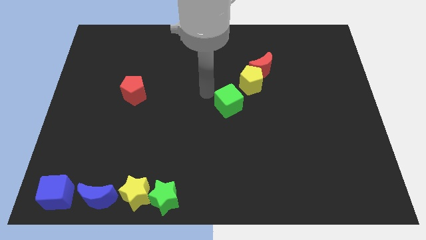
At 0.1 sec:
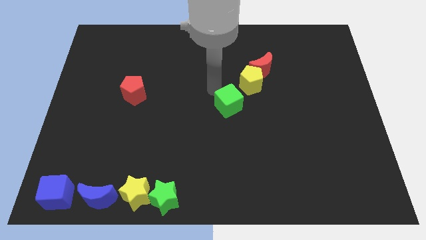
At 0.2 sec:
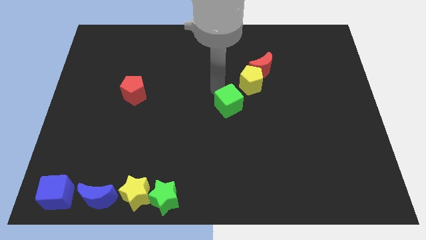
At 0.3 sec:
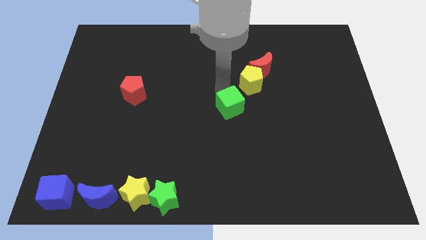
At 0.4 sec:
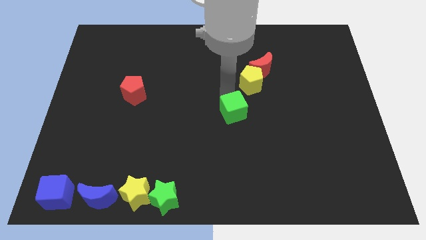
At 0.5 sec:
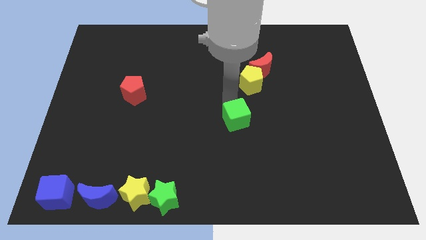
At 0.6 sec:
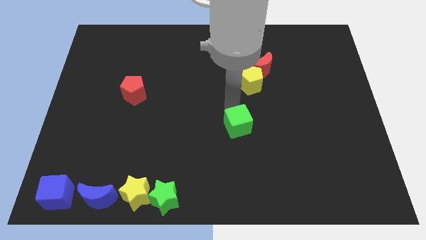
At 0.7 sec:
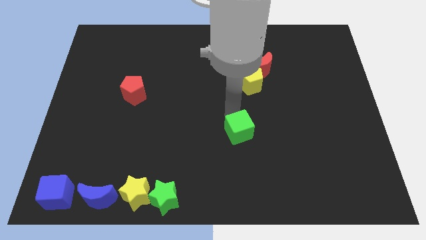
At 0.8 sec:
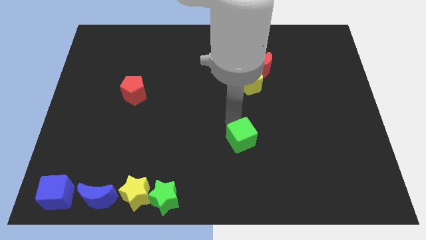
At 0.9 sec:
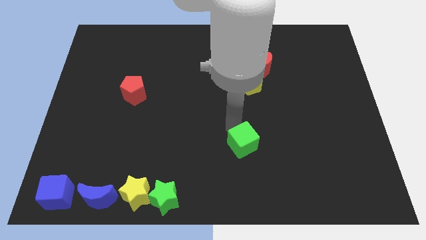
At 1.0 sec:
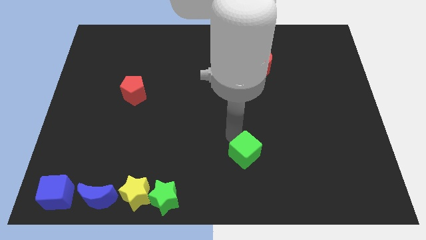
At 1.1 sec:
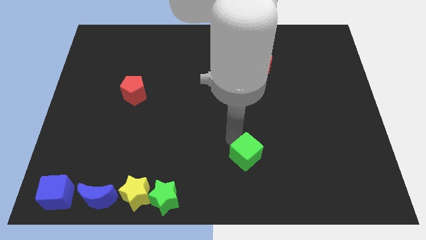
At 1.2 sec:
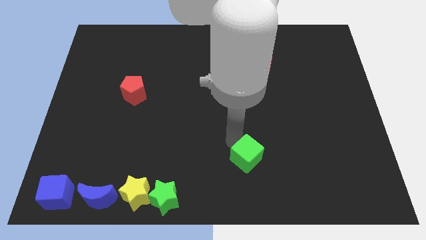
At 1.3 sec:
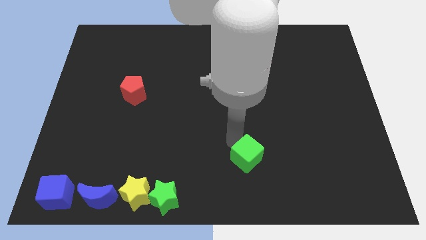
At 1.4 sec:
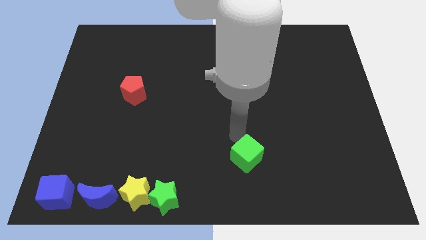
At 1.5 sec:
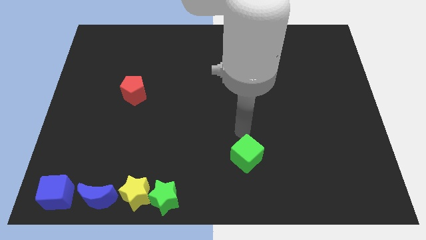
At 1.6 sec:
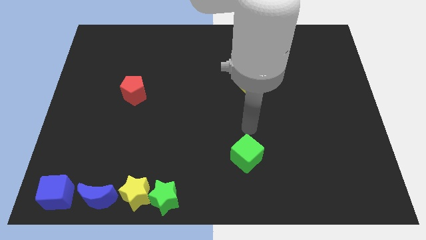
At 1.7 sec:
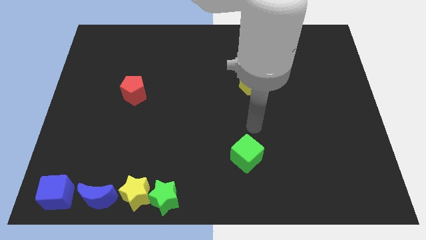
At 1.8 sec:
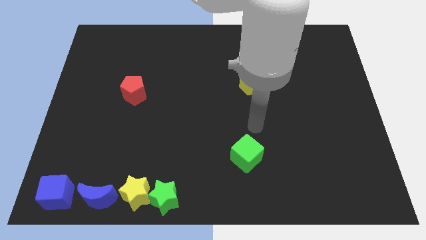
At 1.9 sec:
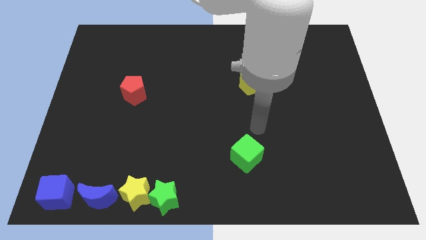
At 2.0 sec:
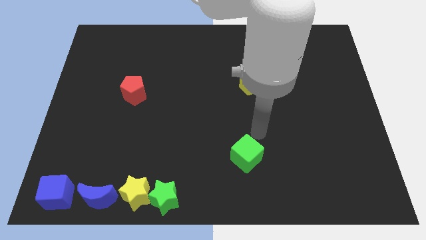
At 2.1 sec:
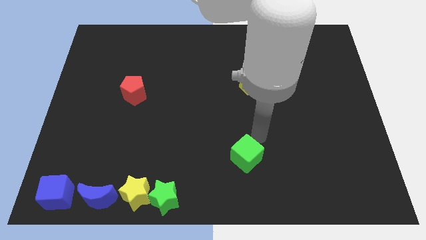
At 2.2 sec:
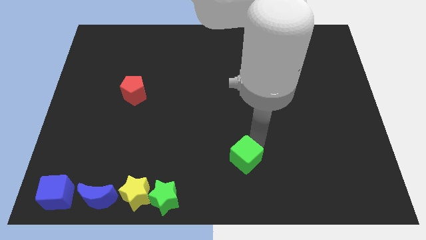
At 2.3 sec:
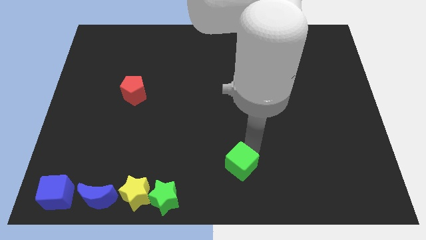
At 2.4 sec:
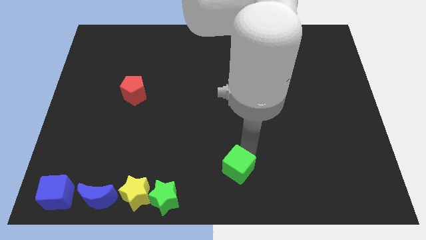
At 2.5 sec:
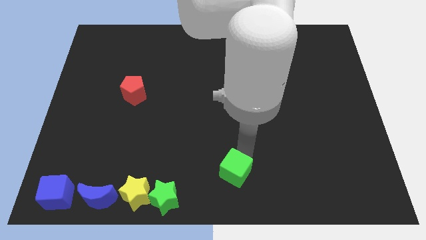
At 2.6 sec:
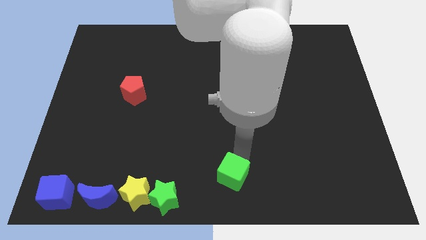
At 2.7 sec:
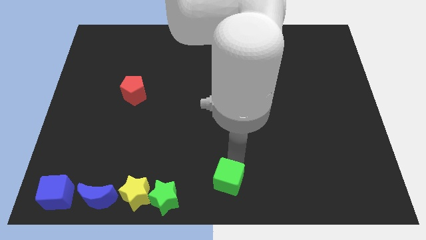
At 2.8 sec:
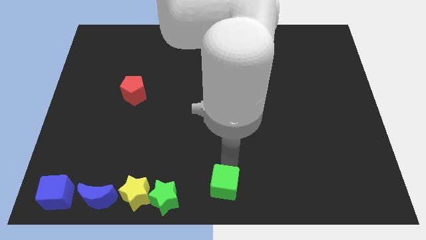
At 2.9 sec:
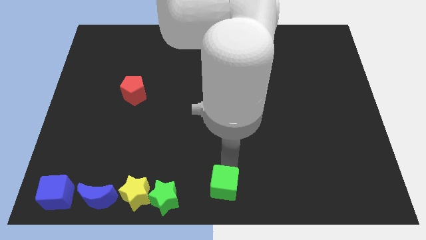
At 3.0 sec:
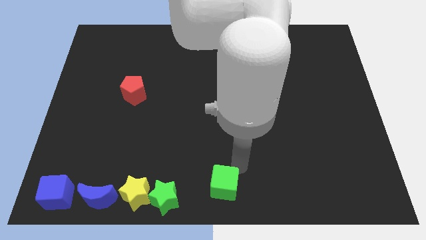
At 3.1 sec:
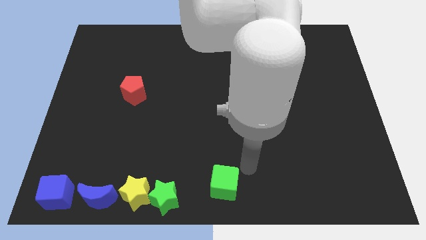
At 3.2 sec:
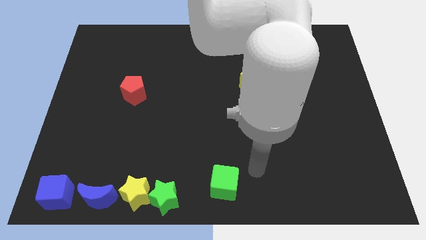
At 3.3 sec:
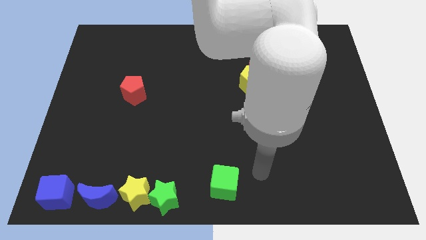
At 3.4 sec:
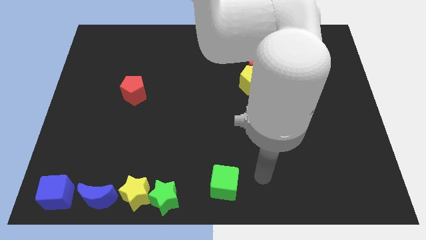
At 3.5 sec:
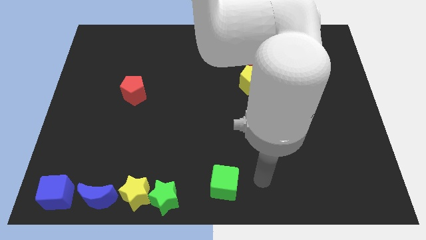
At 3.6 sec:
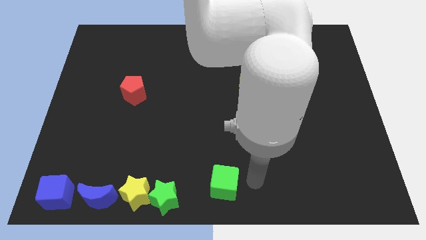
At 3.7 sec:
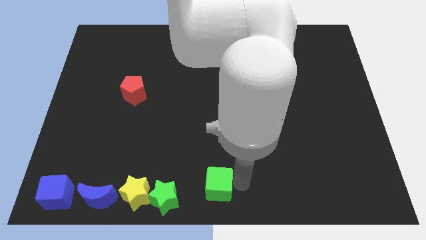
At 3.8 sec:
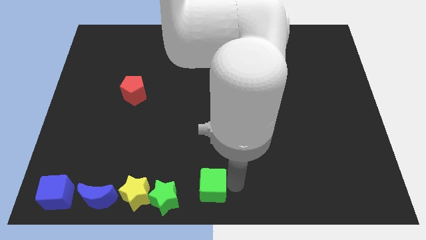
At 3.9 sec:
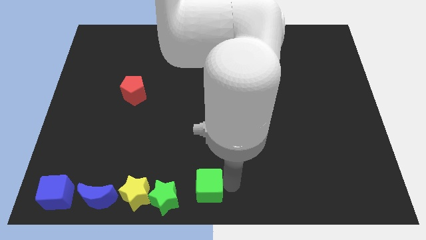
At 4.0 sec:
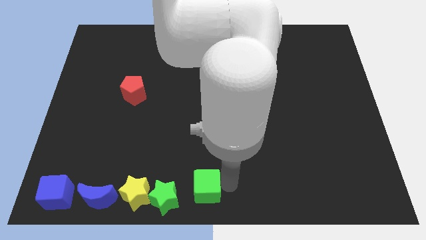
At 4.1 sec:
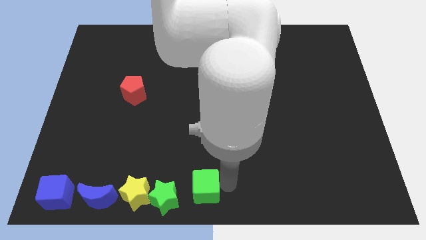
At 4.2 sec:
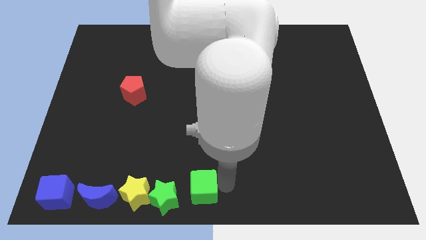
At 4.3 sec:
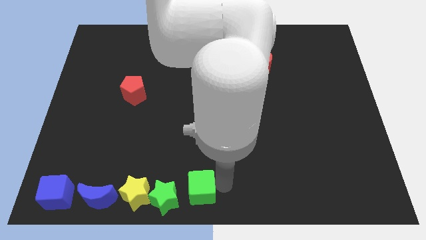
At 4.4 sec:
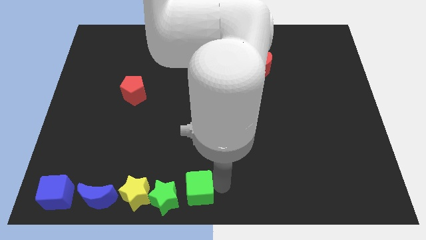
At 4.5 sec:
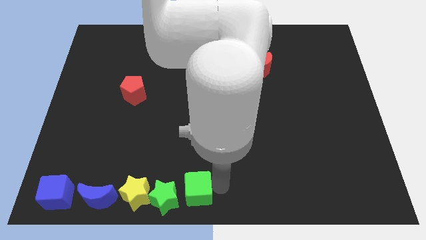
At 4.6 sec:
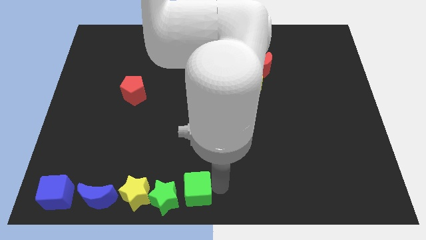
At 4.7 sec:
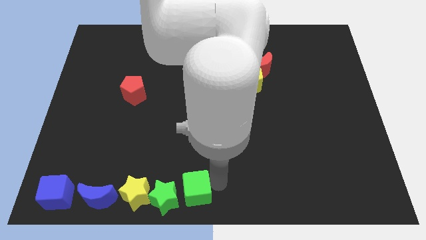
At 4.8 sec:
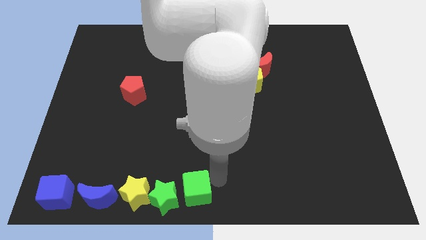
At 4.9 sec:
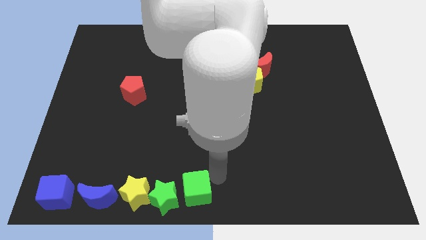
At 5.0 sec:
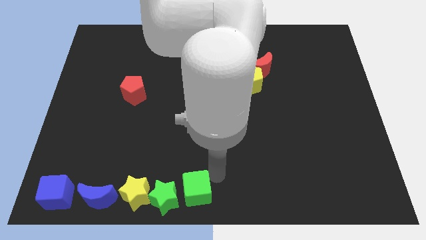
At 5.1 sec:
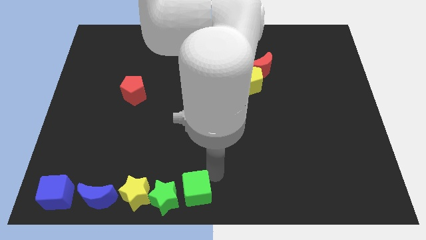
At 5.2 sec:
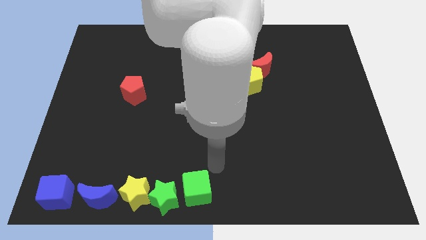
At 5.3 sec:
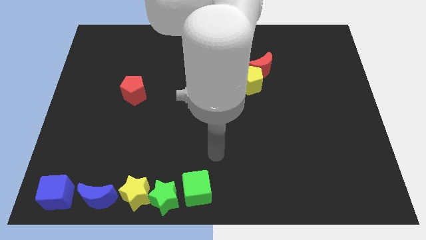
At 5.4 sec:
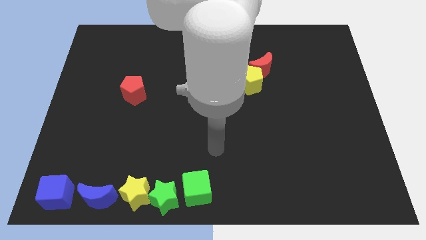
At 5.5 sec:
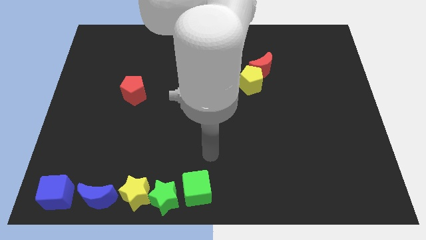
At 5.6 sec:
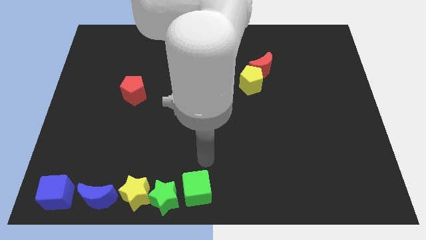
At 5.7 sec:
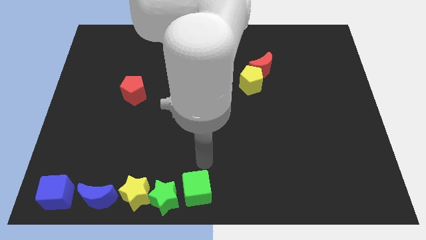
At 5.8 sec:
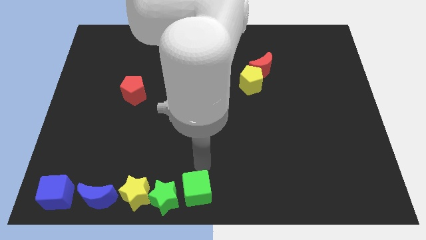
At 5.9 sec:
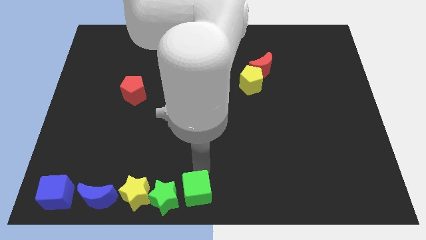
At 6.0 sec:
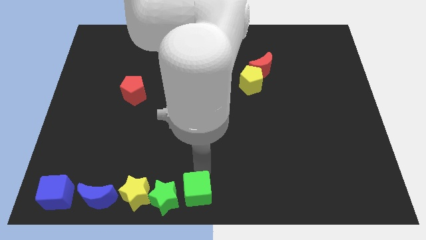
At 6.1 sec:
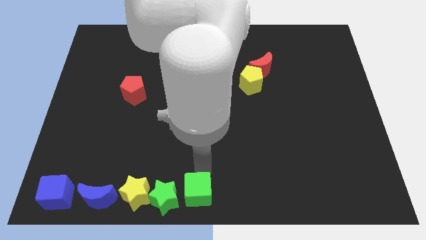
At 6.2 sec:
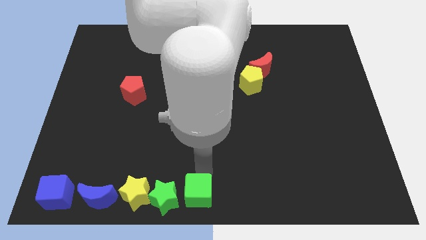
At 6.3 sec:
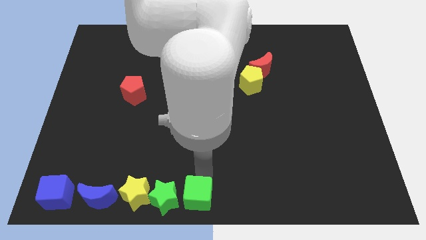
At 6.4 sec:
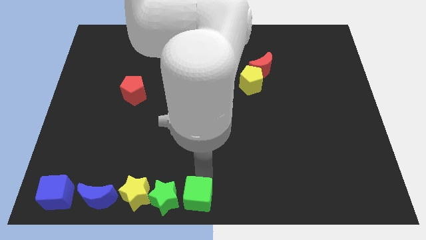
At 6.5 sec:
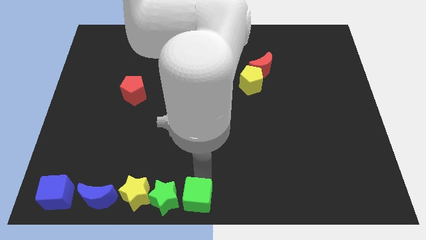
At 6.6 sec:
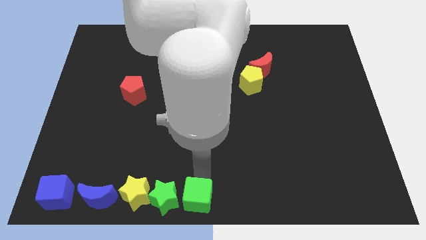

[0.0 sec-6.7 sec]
place the green cube at the bottom center of the board

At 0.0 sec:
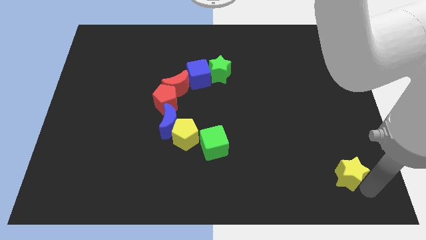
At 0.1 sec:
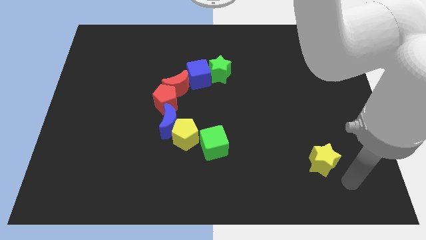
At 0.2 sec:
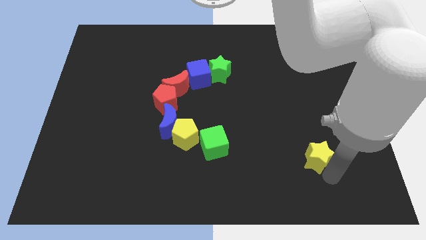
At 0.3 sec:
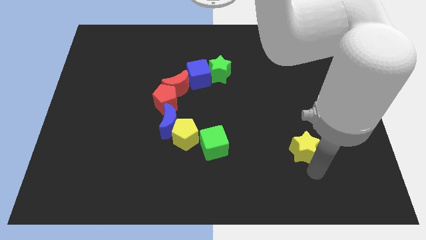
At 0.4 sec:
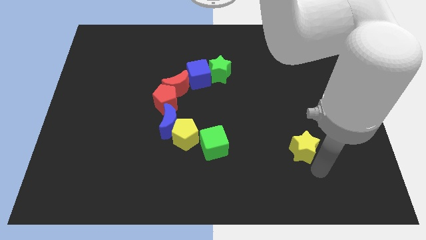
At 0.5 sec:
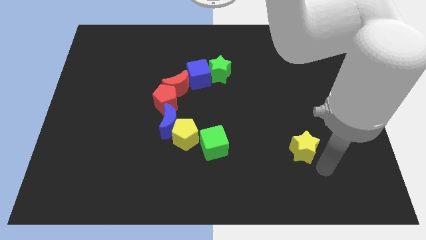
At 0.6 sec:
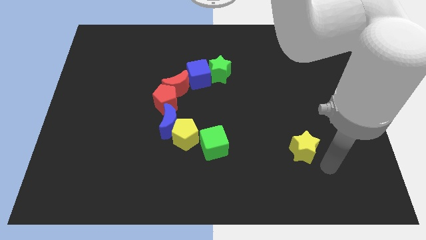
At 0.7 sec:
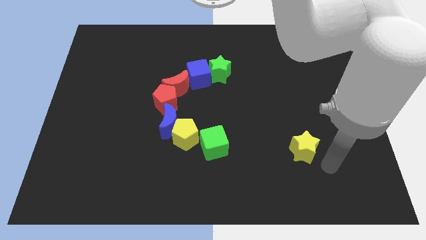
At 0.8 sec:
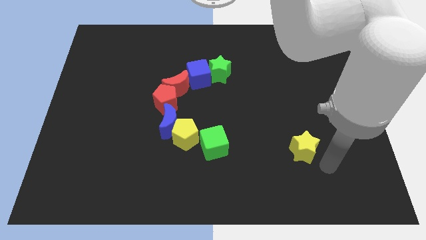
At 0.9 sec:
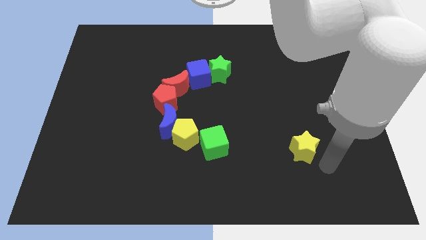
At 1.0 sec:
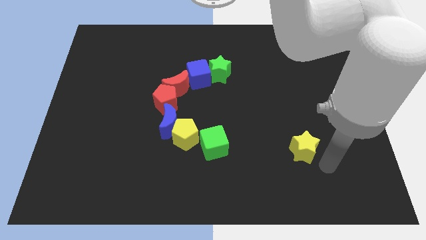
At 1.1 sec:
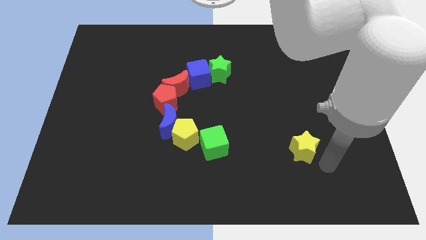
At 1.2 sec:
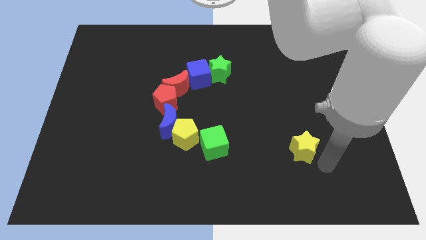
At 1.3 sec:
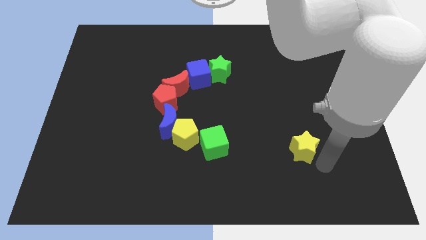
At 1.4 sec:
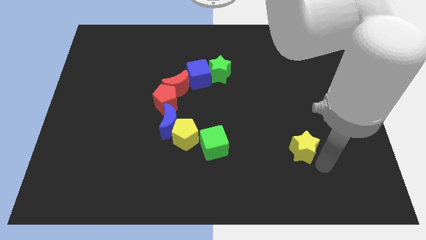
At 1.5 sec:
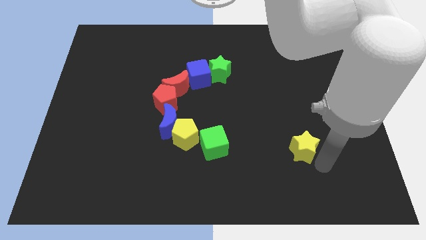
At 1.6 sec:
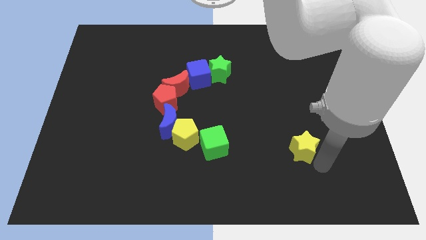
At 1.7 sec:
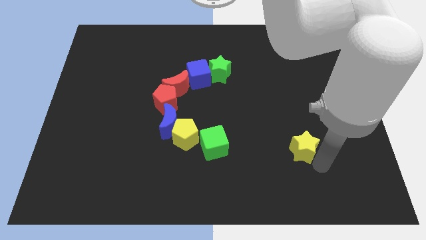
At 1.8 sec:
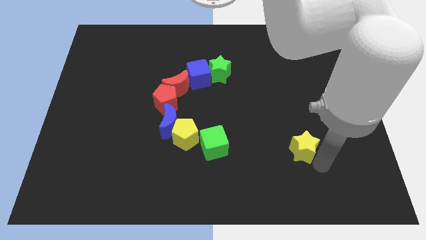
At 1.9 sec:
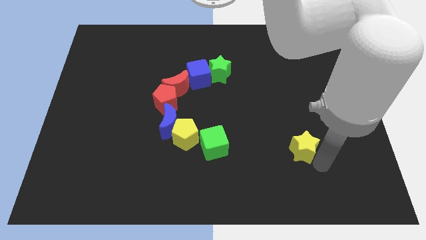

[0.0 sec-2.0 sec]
push the yellow star towards the center of the board

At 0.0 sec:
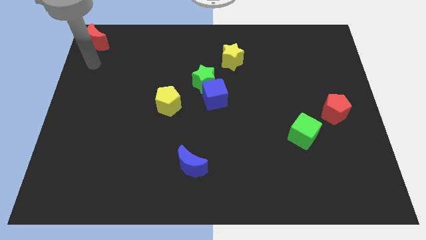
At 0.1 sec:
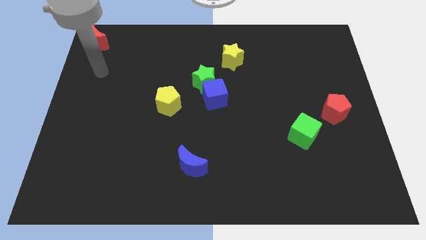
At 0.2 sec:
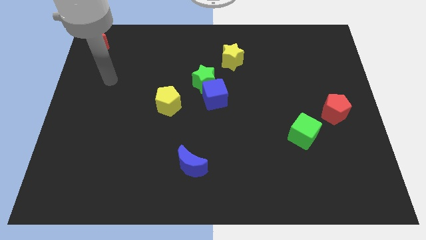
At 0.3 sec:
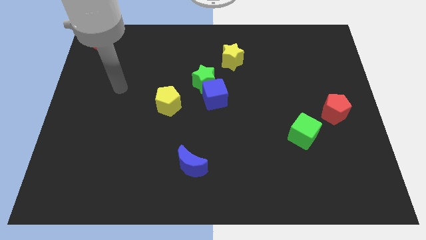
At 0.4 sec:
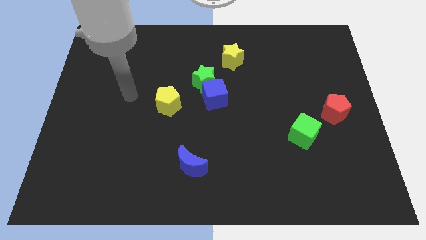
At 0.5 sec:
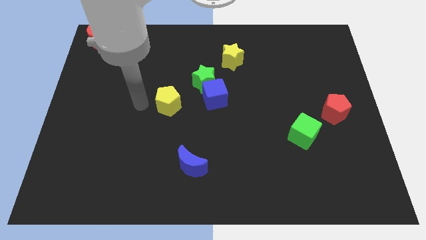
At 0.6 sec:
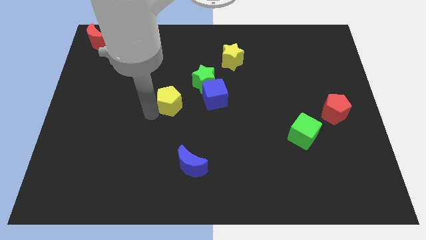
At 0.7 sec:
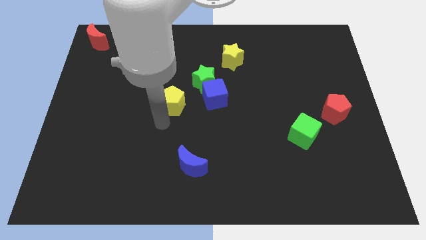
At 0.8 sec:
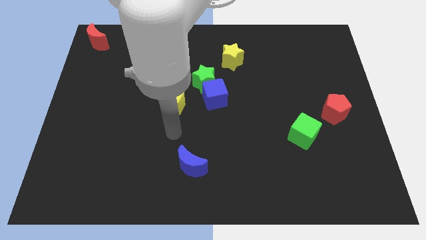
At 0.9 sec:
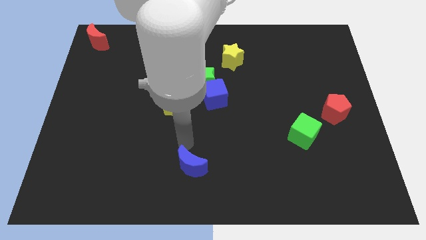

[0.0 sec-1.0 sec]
move arm left above blue moon
